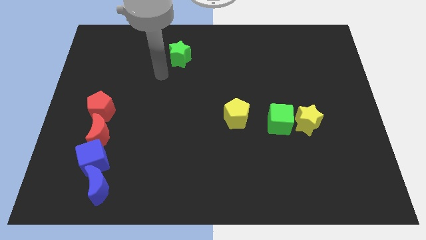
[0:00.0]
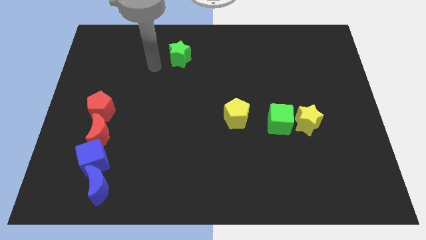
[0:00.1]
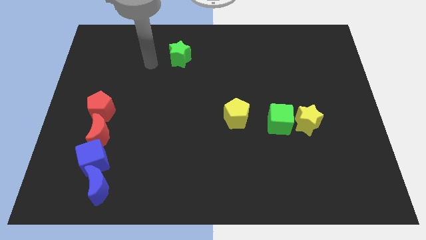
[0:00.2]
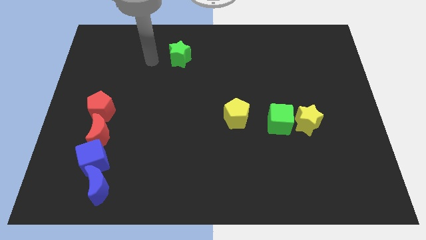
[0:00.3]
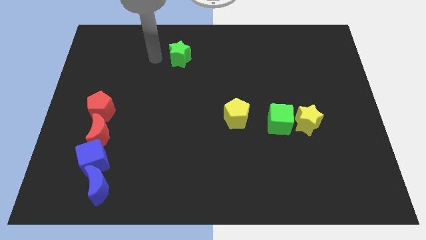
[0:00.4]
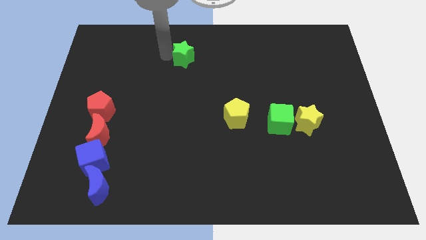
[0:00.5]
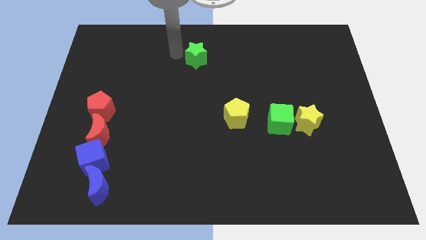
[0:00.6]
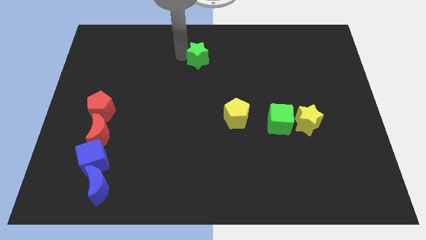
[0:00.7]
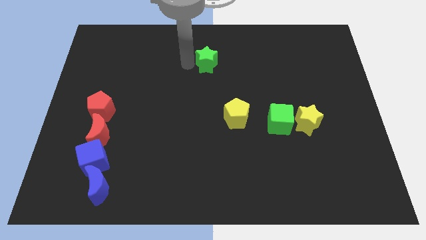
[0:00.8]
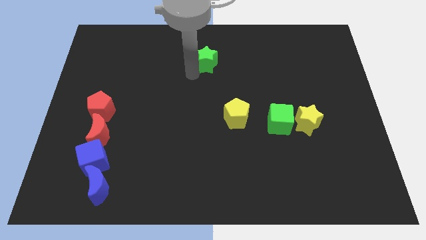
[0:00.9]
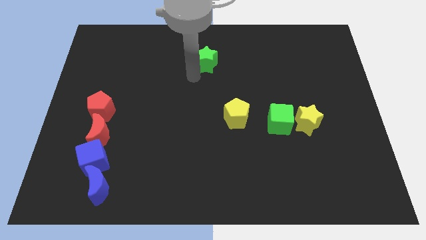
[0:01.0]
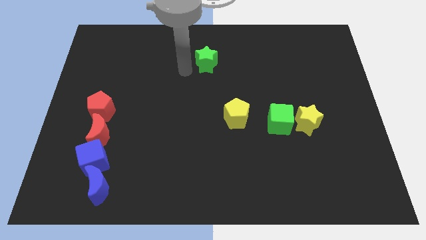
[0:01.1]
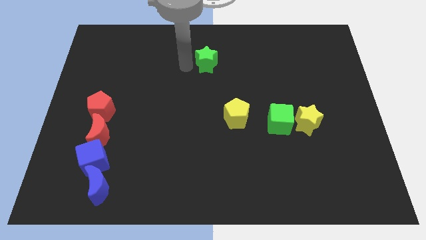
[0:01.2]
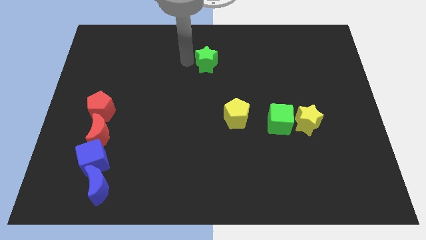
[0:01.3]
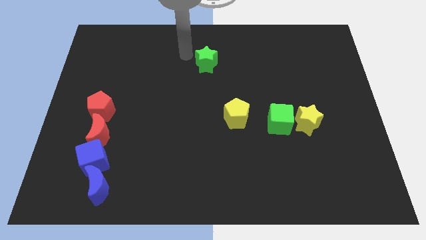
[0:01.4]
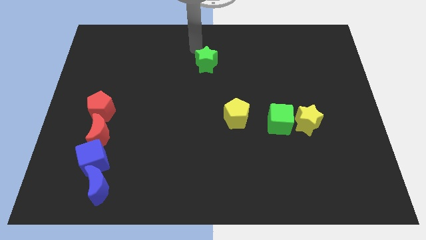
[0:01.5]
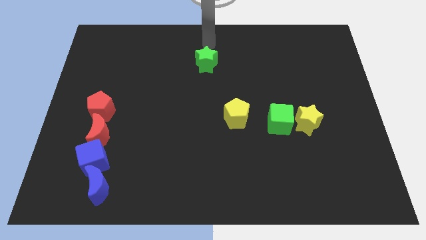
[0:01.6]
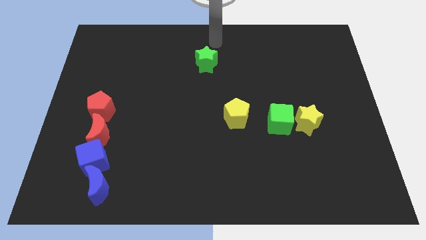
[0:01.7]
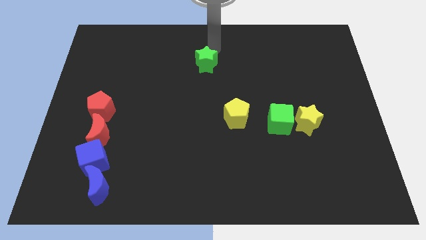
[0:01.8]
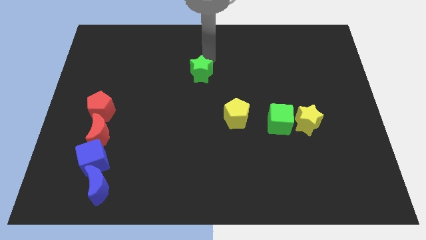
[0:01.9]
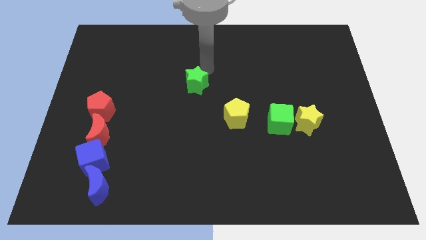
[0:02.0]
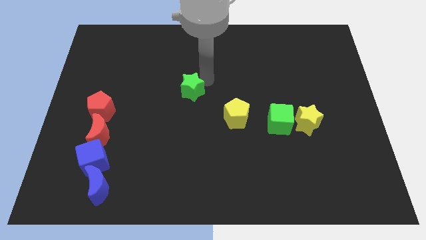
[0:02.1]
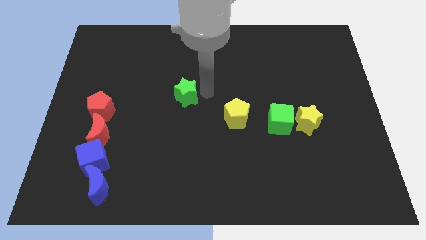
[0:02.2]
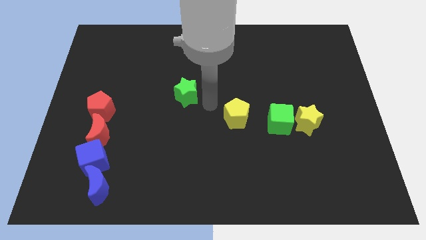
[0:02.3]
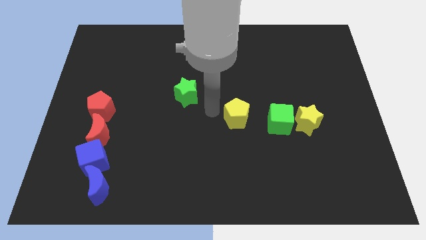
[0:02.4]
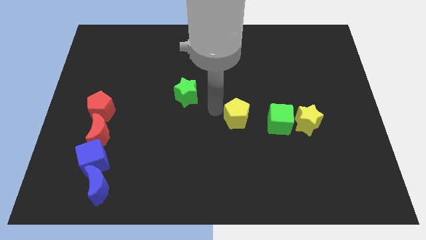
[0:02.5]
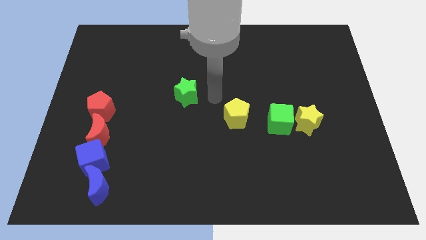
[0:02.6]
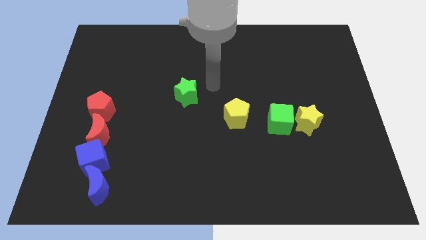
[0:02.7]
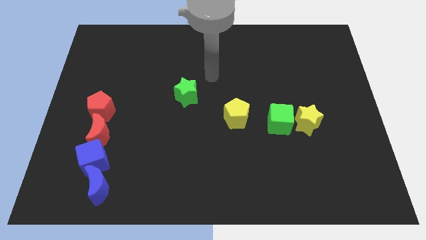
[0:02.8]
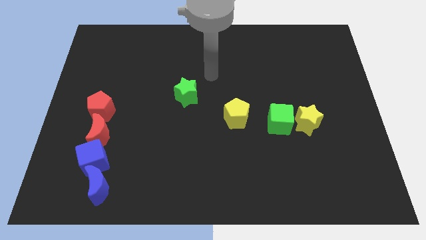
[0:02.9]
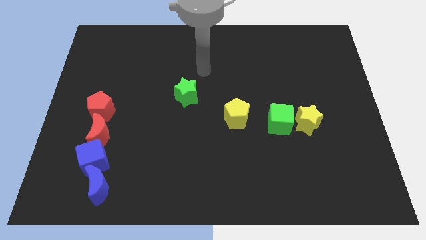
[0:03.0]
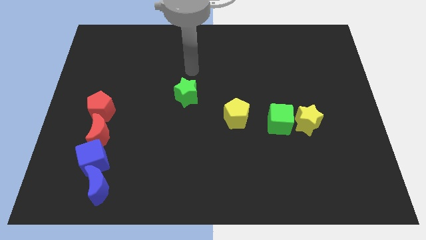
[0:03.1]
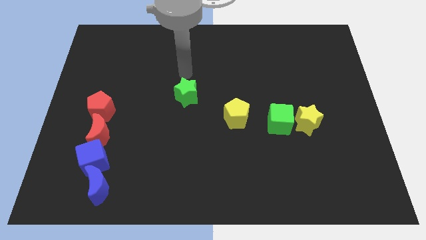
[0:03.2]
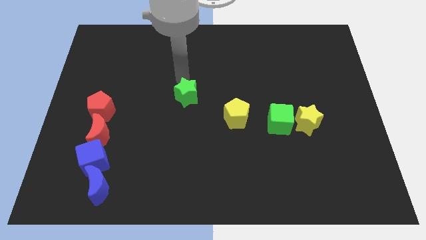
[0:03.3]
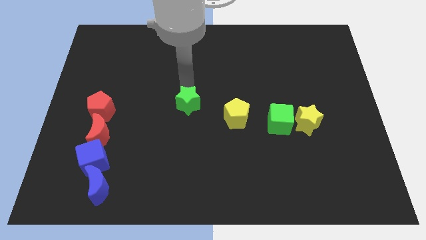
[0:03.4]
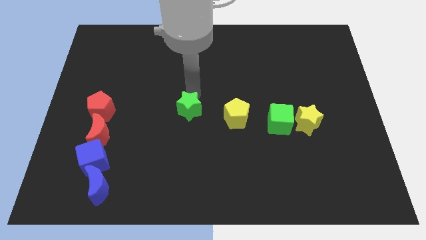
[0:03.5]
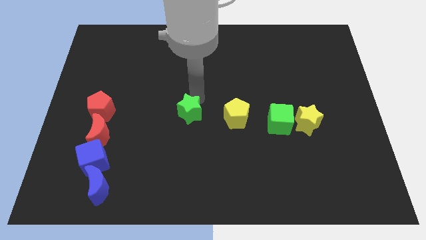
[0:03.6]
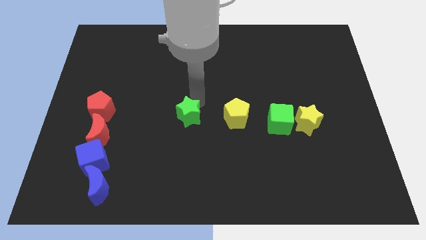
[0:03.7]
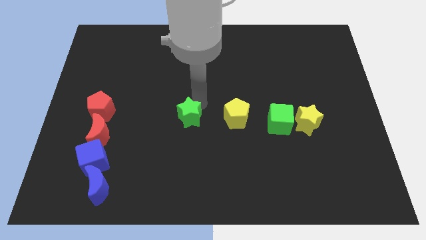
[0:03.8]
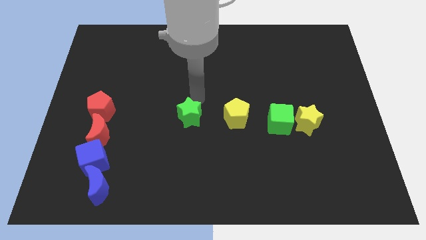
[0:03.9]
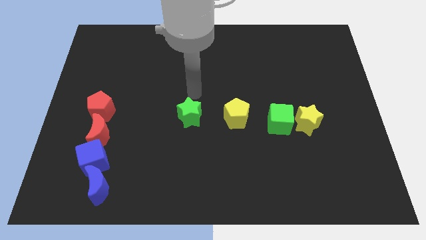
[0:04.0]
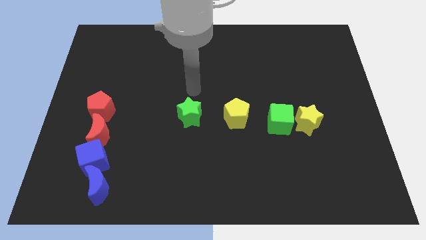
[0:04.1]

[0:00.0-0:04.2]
place the green star parallel to the yellow pentagon

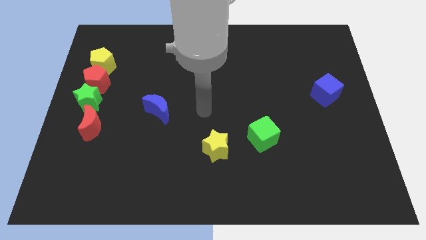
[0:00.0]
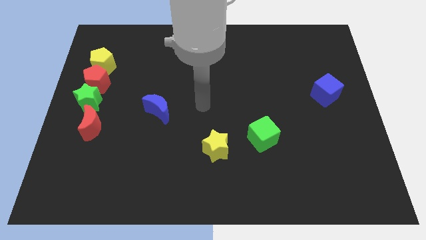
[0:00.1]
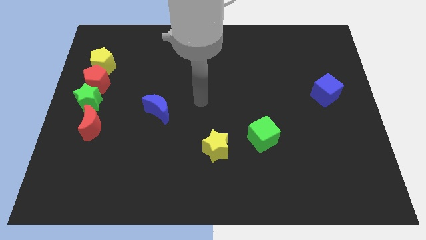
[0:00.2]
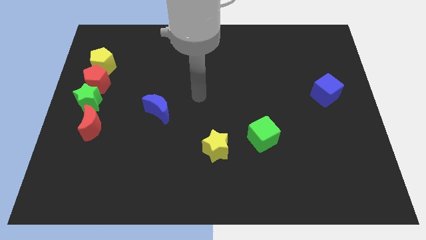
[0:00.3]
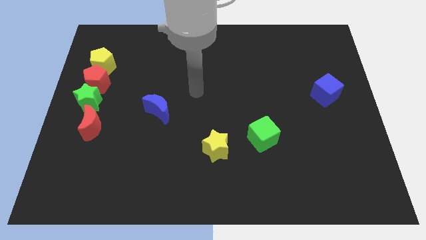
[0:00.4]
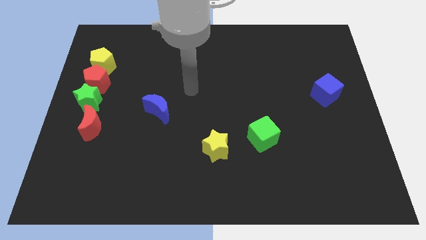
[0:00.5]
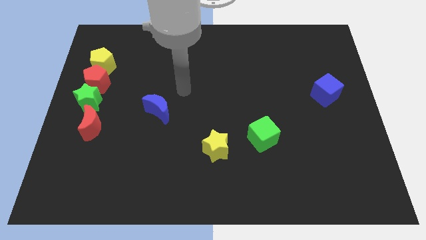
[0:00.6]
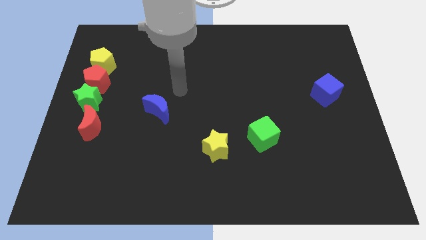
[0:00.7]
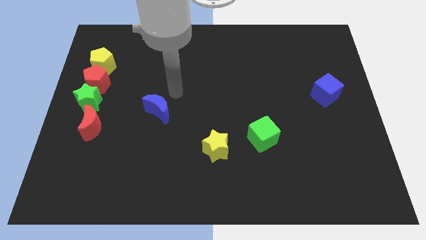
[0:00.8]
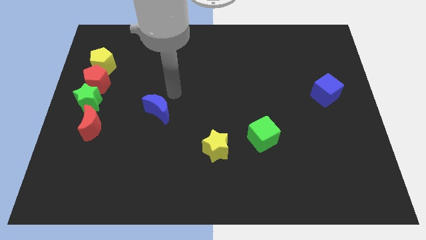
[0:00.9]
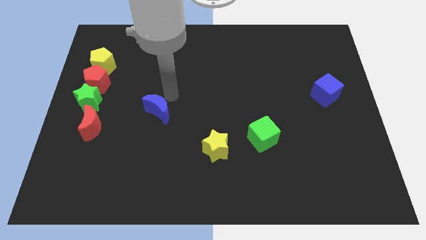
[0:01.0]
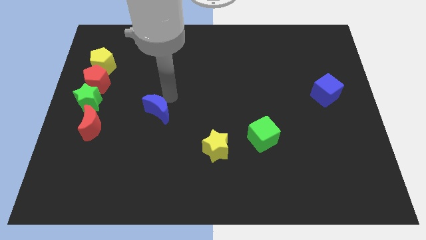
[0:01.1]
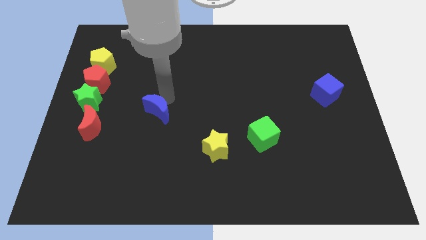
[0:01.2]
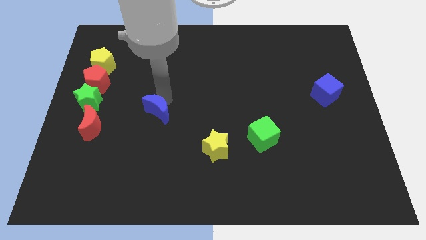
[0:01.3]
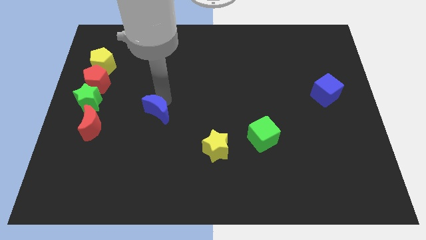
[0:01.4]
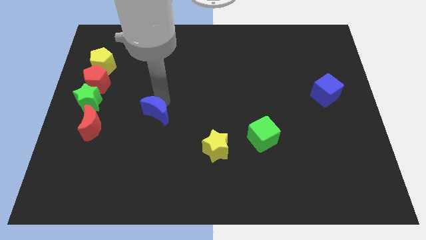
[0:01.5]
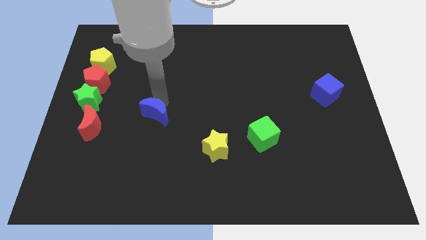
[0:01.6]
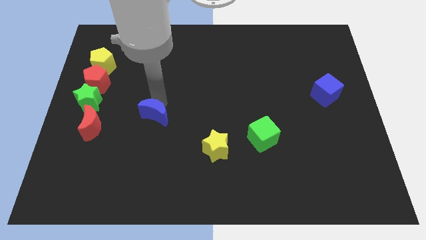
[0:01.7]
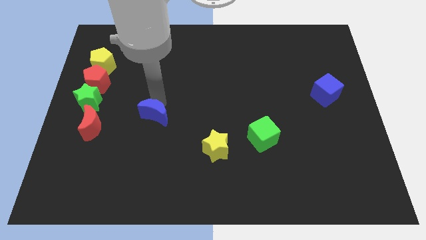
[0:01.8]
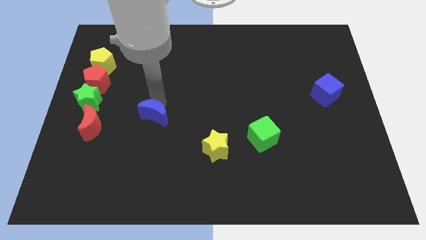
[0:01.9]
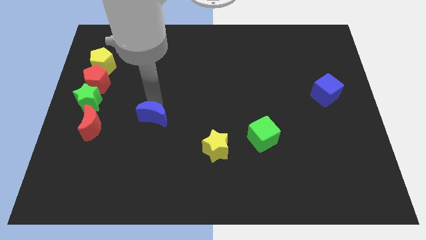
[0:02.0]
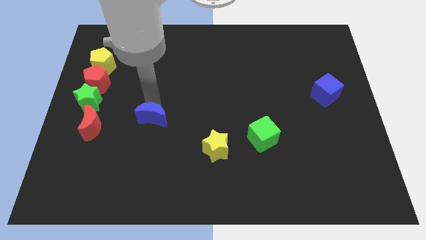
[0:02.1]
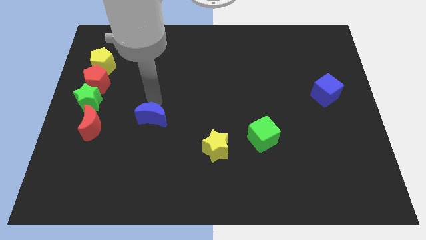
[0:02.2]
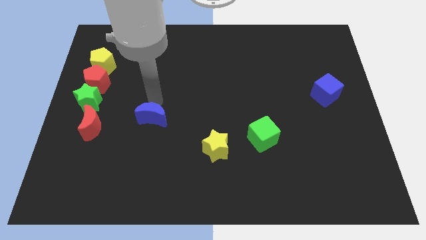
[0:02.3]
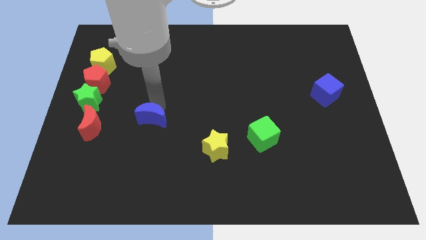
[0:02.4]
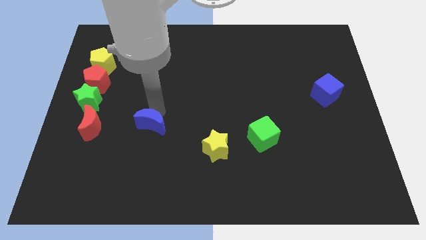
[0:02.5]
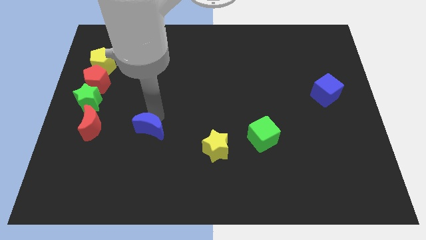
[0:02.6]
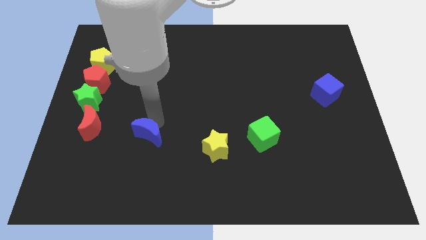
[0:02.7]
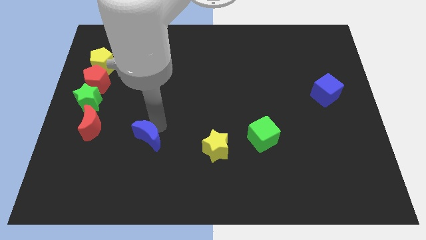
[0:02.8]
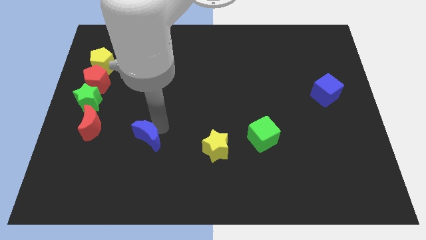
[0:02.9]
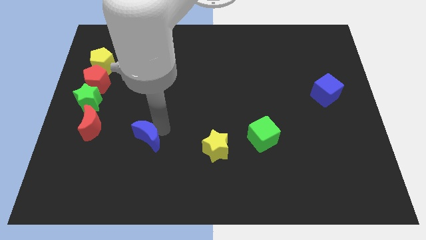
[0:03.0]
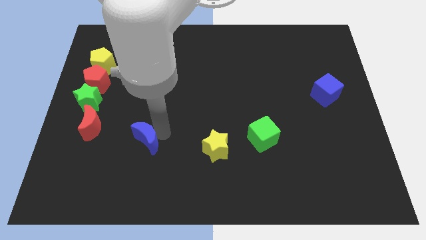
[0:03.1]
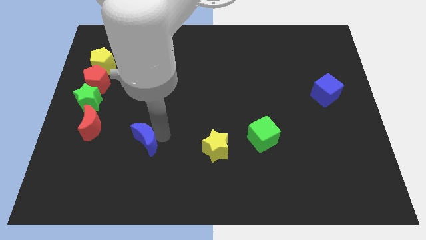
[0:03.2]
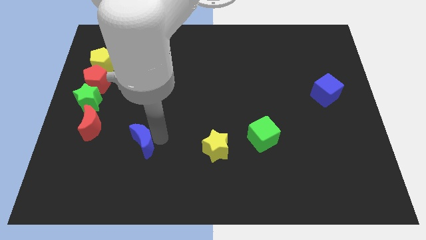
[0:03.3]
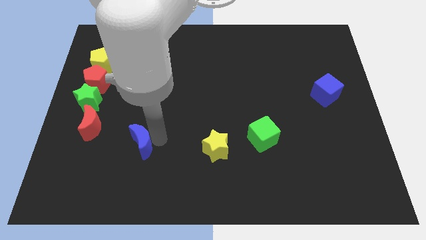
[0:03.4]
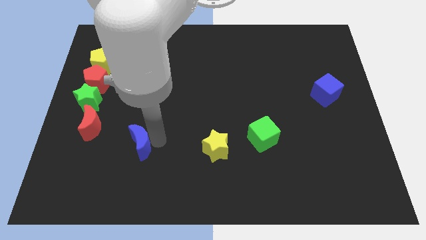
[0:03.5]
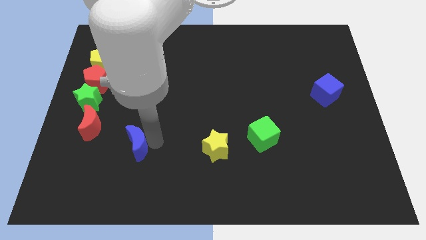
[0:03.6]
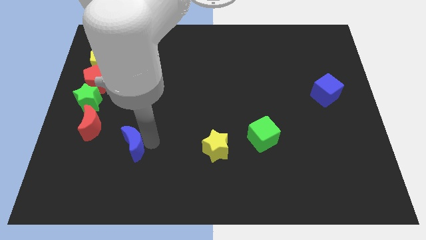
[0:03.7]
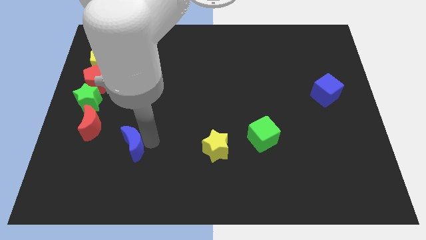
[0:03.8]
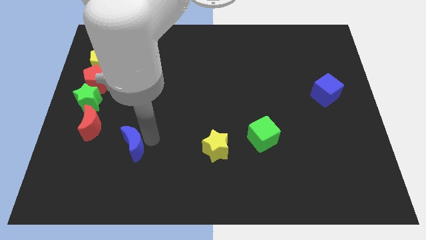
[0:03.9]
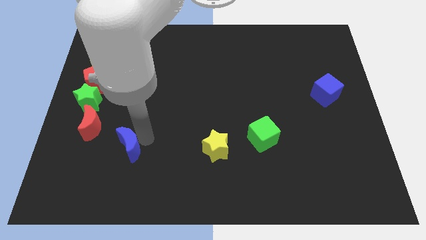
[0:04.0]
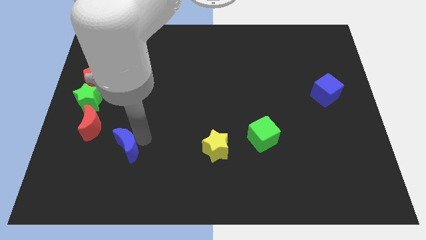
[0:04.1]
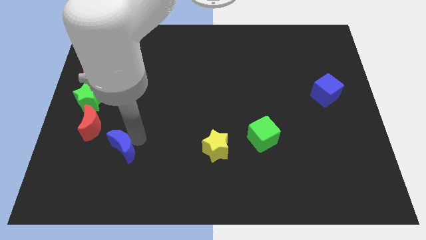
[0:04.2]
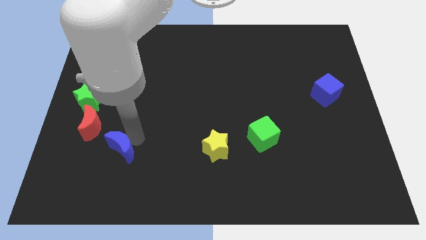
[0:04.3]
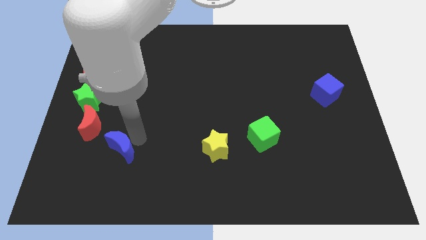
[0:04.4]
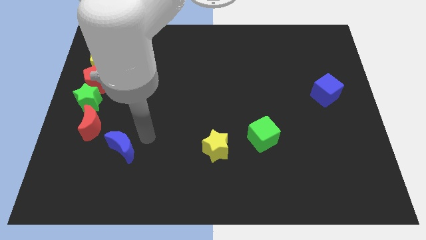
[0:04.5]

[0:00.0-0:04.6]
place blue moon to the bottom right of the red moon
